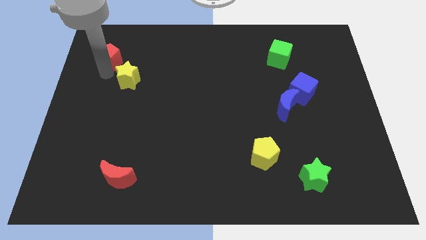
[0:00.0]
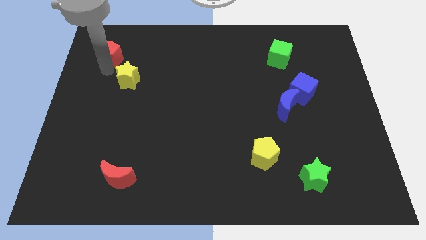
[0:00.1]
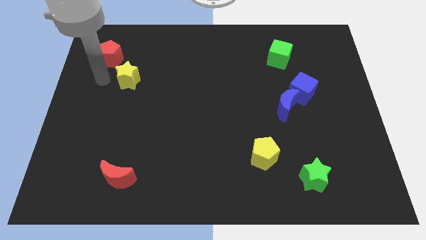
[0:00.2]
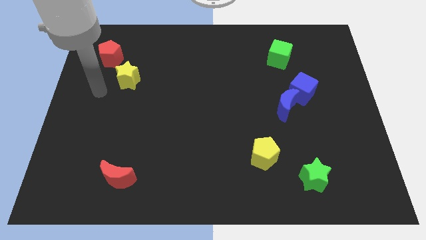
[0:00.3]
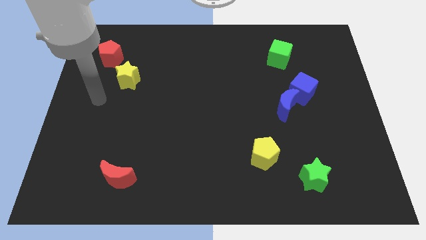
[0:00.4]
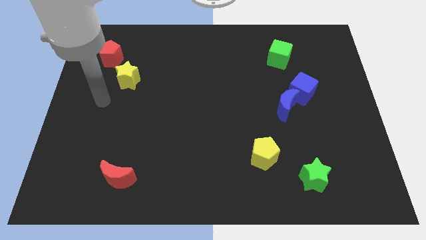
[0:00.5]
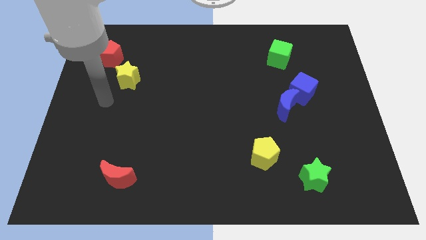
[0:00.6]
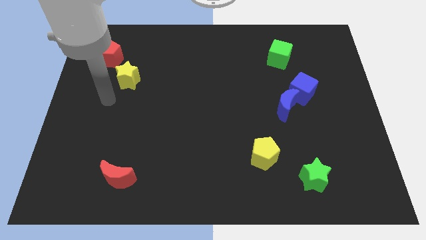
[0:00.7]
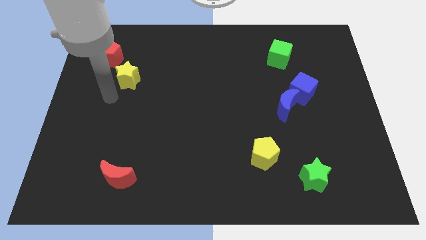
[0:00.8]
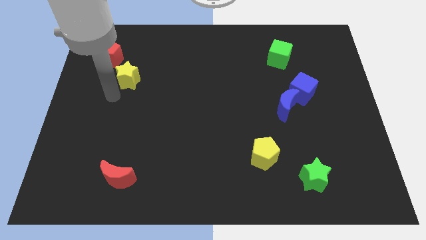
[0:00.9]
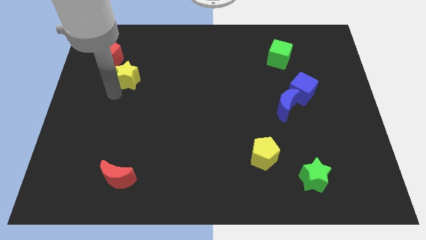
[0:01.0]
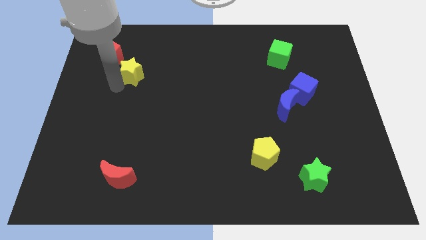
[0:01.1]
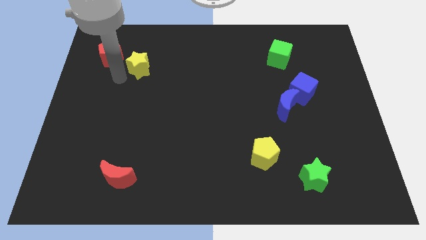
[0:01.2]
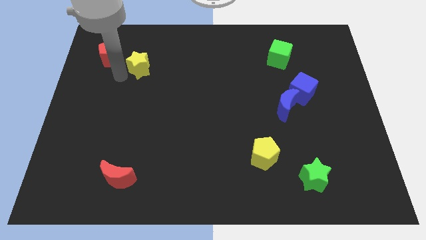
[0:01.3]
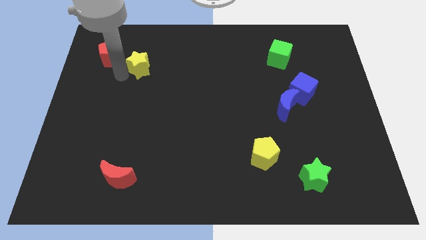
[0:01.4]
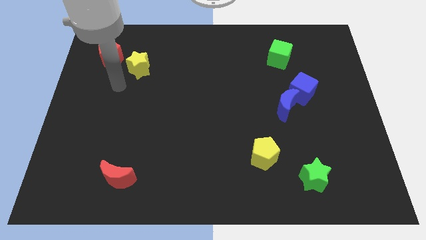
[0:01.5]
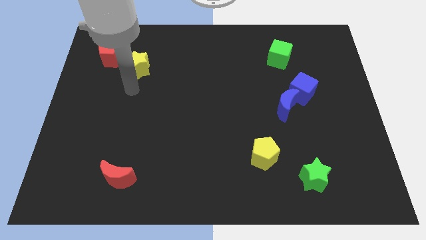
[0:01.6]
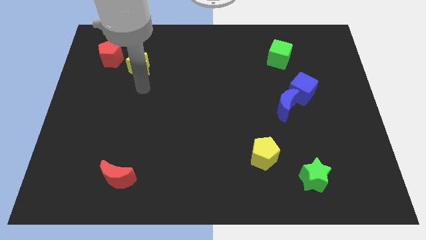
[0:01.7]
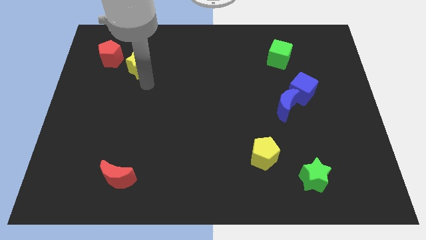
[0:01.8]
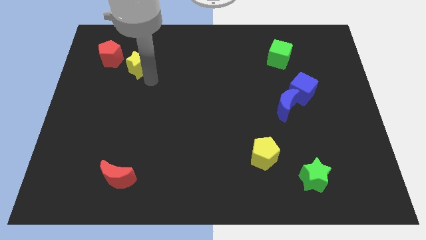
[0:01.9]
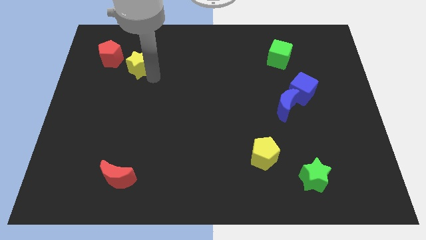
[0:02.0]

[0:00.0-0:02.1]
move the yellow star diagonally to the bottom right of the red pentagon

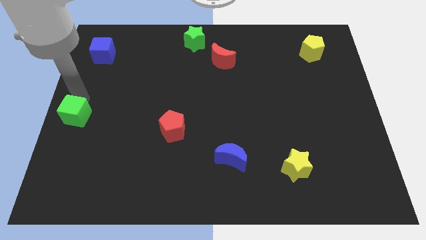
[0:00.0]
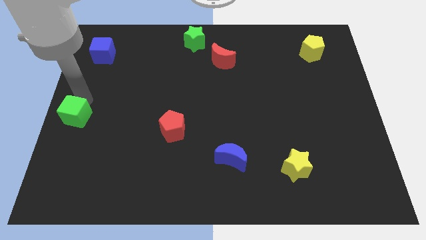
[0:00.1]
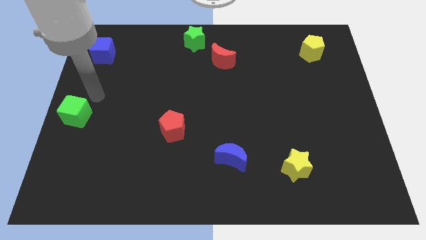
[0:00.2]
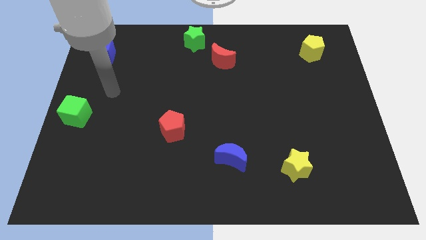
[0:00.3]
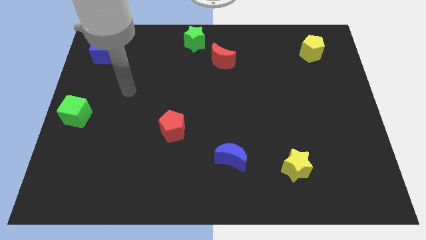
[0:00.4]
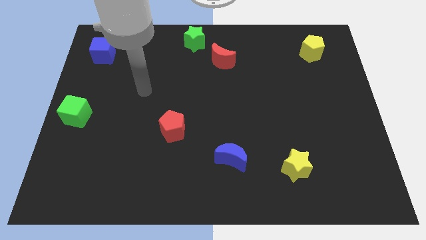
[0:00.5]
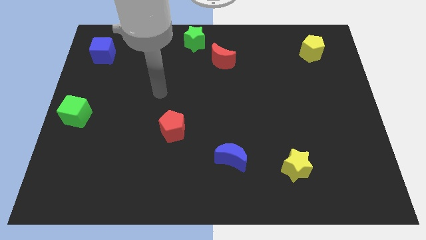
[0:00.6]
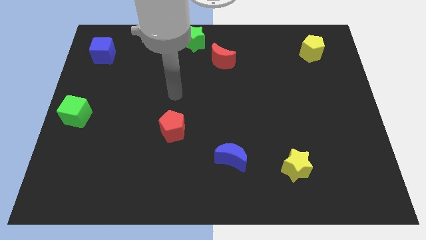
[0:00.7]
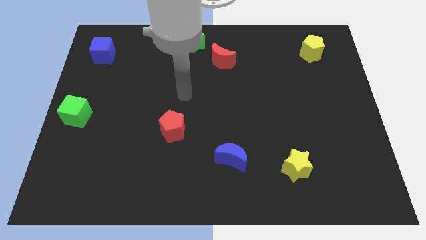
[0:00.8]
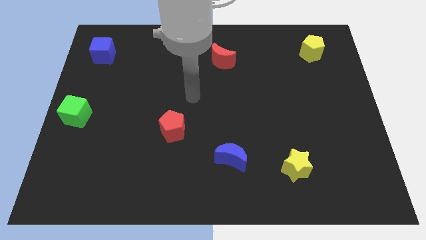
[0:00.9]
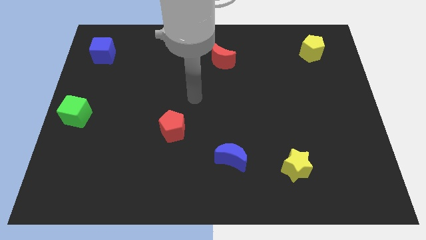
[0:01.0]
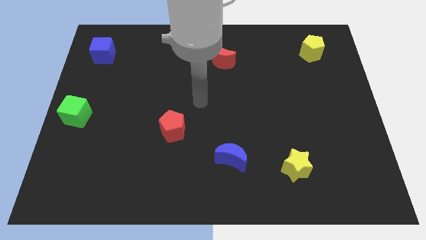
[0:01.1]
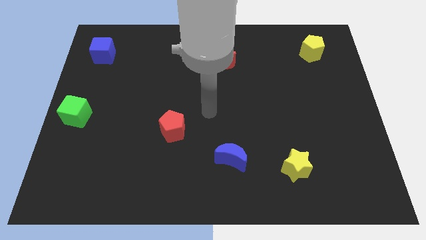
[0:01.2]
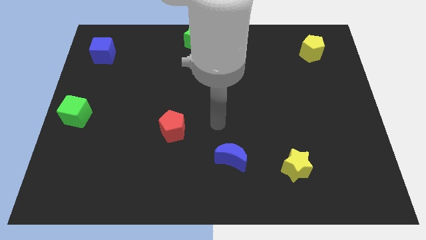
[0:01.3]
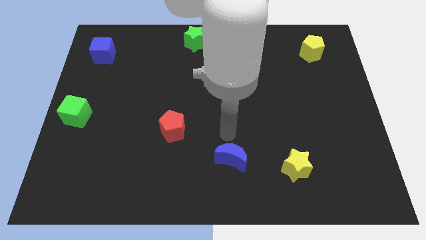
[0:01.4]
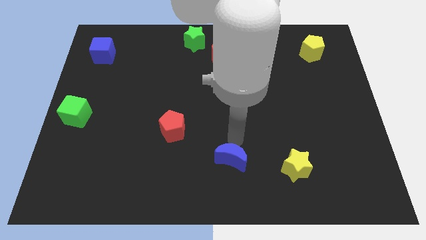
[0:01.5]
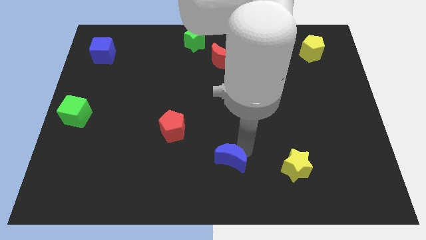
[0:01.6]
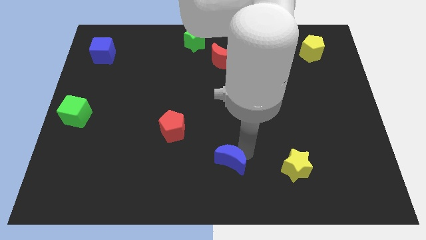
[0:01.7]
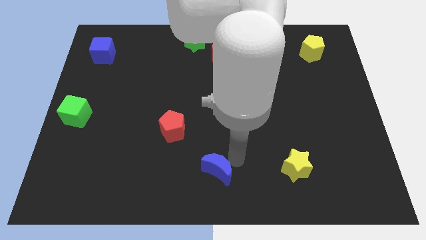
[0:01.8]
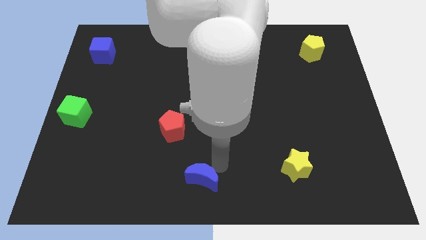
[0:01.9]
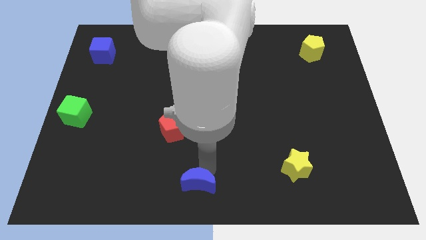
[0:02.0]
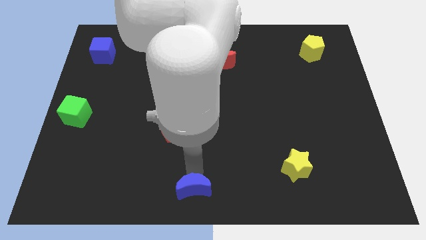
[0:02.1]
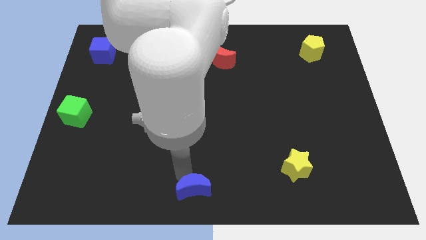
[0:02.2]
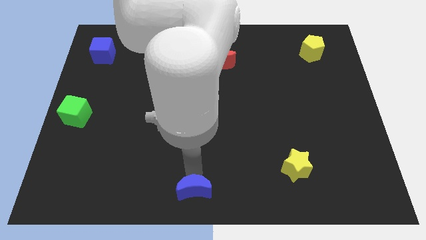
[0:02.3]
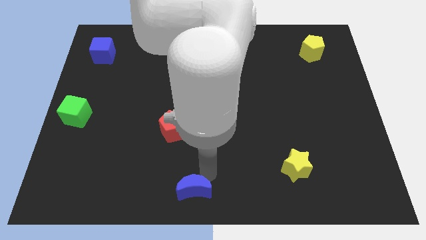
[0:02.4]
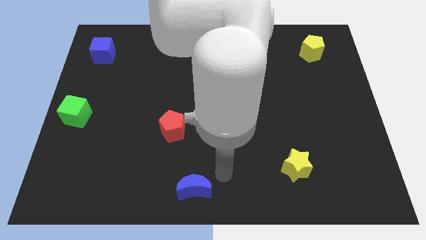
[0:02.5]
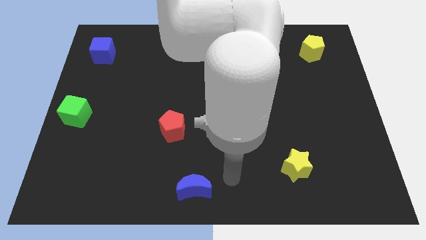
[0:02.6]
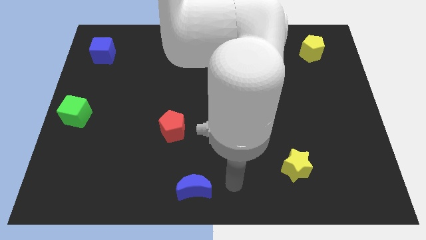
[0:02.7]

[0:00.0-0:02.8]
push the blue moon towards the bottom center of the board

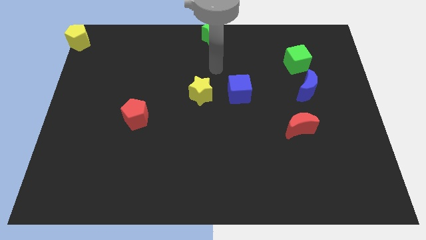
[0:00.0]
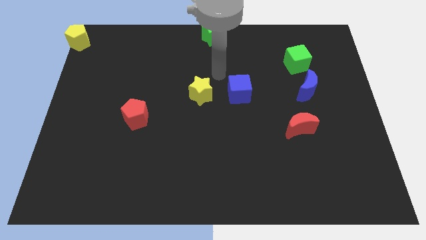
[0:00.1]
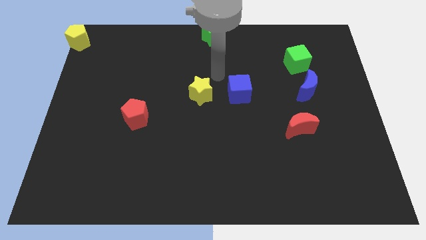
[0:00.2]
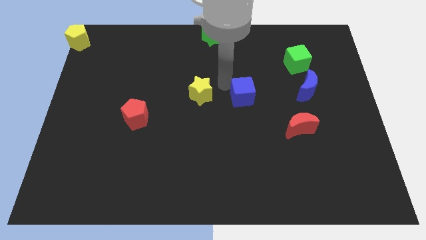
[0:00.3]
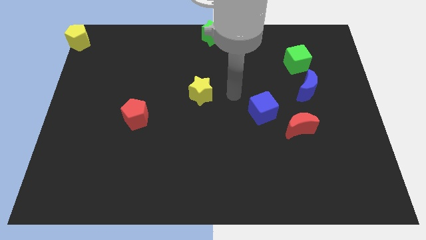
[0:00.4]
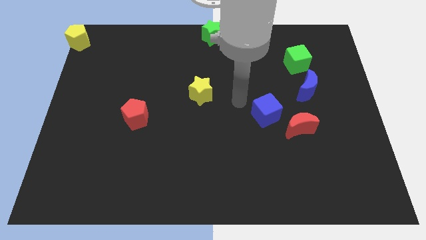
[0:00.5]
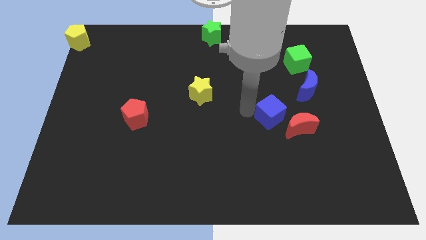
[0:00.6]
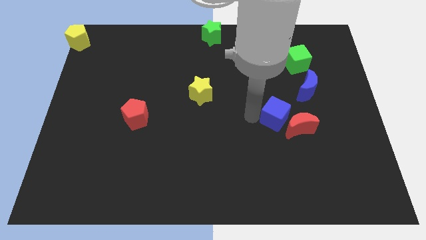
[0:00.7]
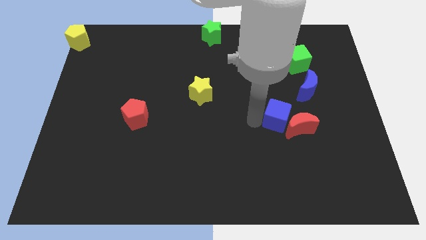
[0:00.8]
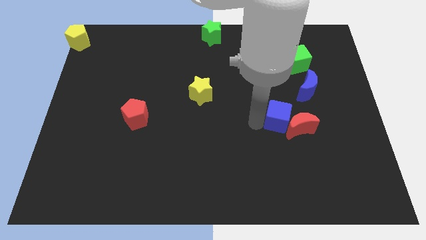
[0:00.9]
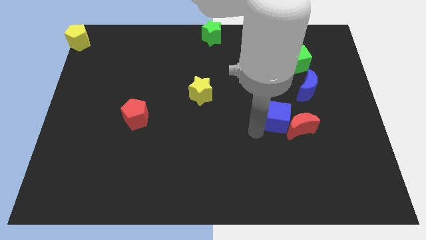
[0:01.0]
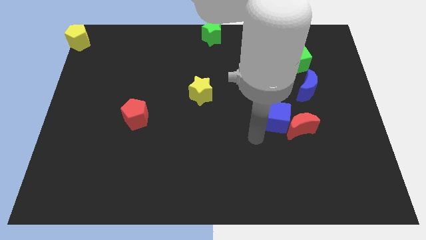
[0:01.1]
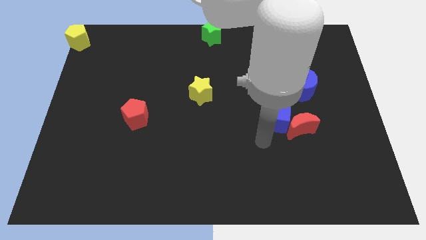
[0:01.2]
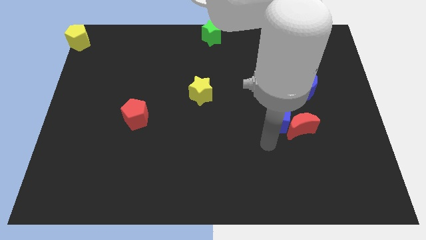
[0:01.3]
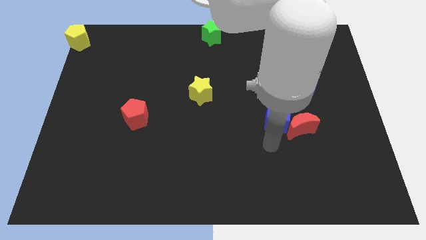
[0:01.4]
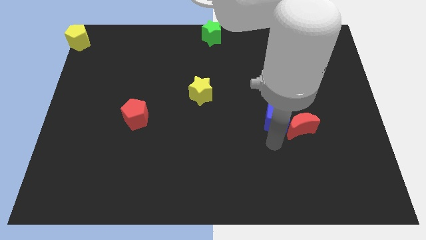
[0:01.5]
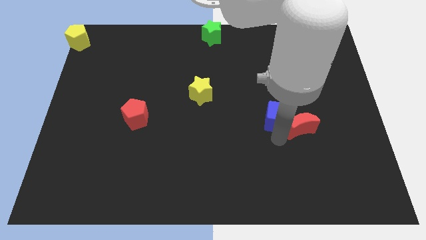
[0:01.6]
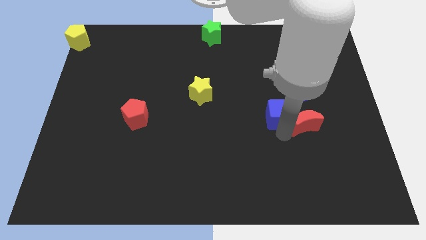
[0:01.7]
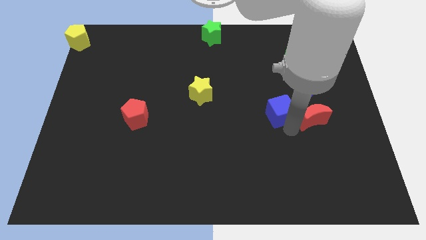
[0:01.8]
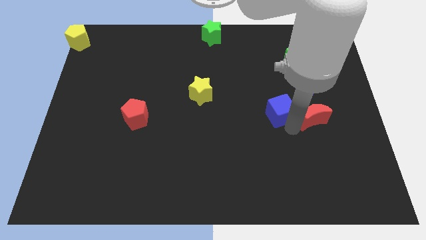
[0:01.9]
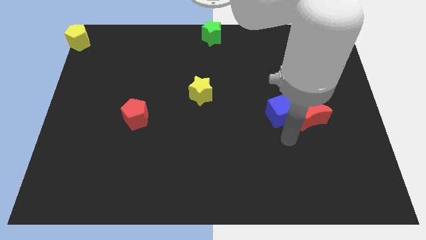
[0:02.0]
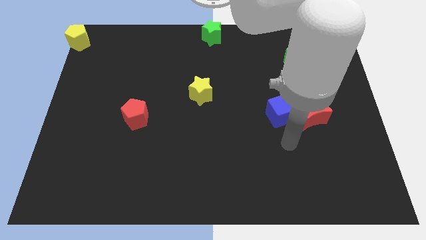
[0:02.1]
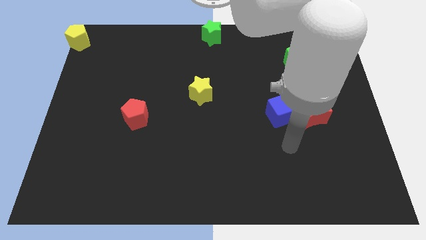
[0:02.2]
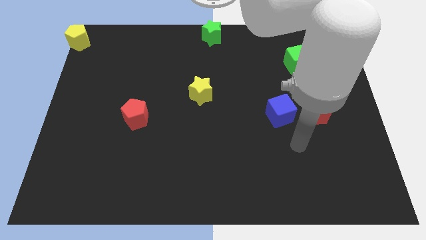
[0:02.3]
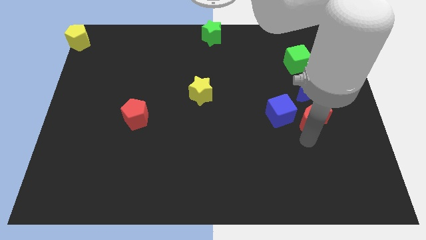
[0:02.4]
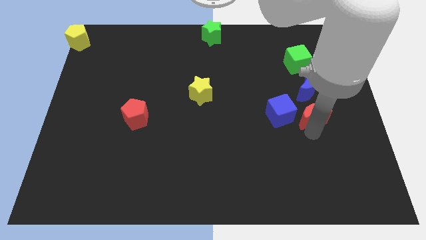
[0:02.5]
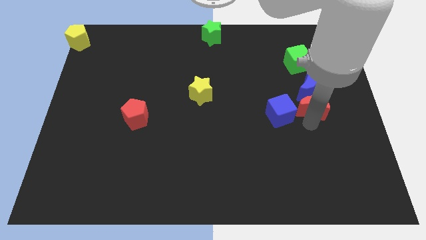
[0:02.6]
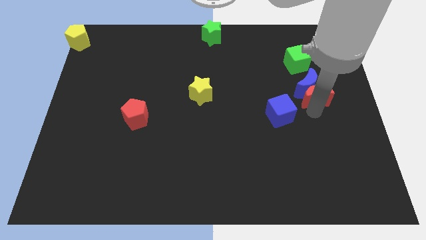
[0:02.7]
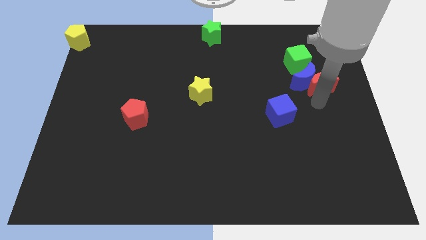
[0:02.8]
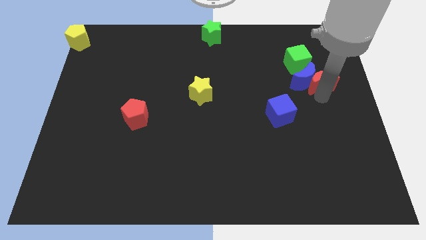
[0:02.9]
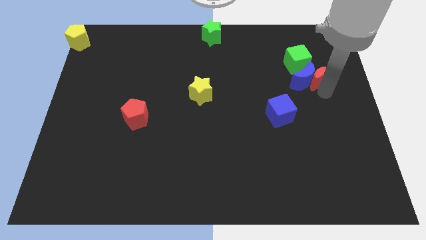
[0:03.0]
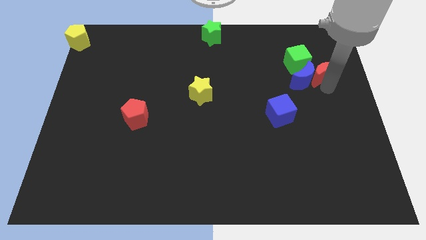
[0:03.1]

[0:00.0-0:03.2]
separate the blue cube from the red crescent

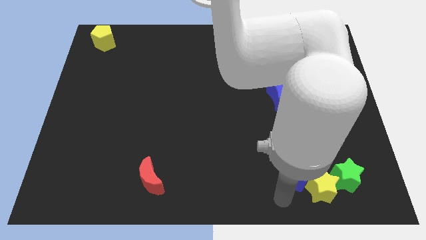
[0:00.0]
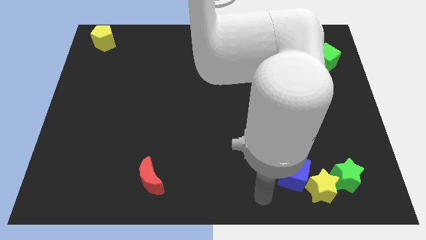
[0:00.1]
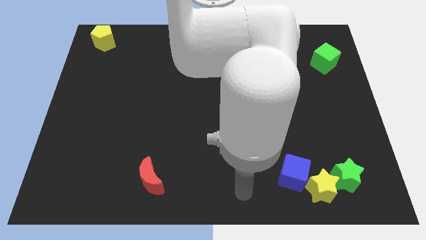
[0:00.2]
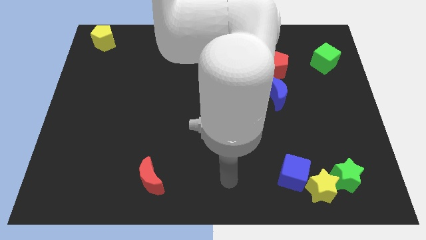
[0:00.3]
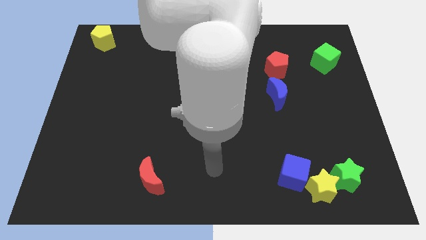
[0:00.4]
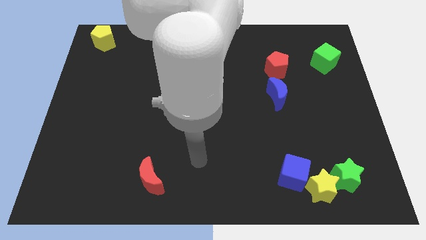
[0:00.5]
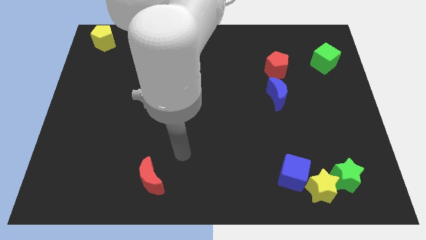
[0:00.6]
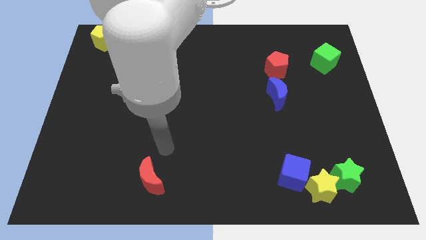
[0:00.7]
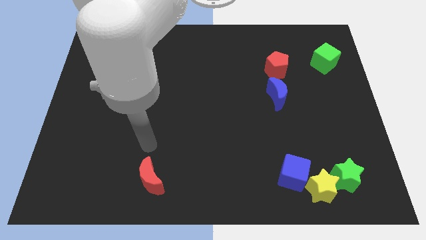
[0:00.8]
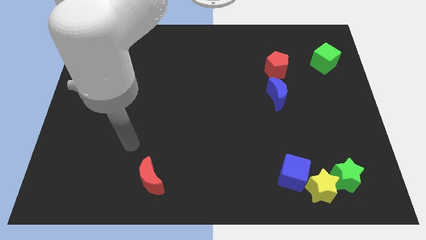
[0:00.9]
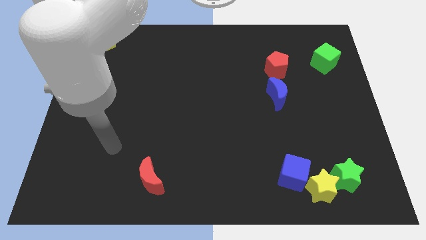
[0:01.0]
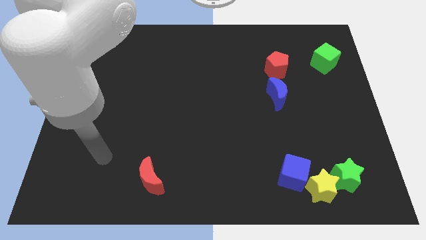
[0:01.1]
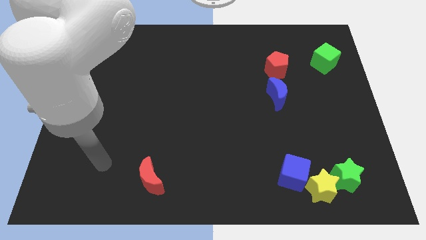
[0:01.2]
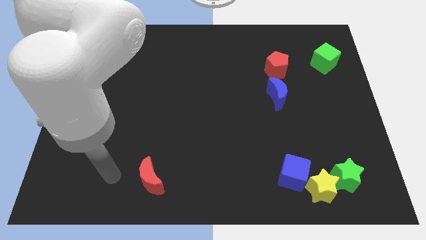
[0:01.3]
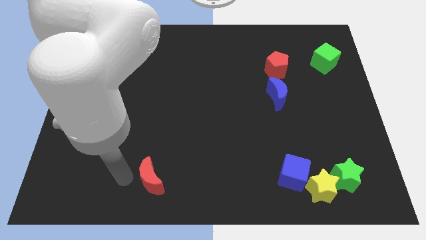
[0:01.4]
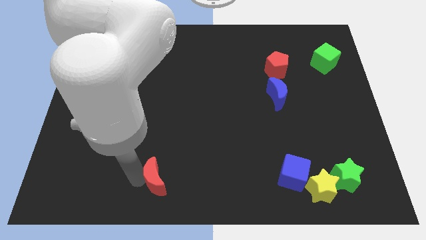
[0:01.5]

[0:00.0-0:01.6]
point the arm to the left of the red crescent
